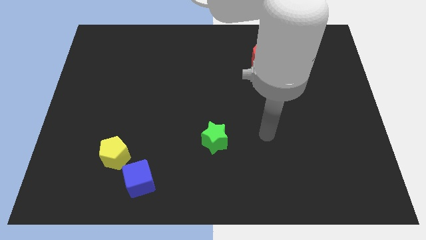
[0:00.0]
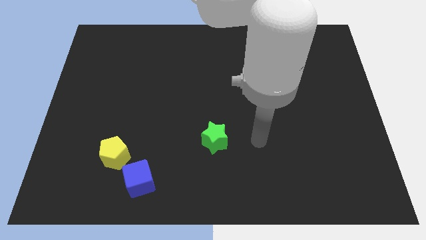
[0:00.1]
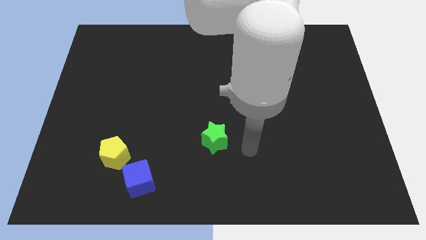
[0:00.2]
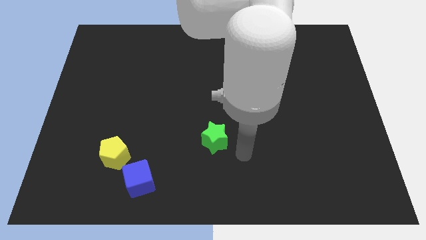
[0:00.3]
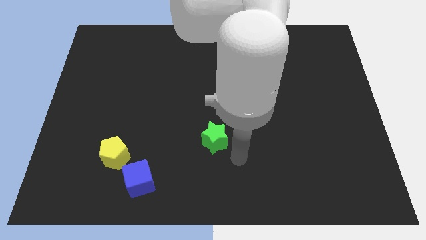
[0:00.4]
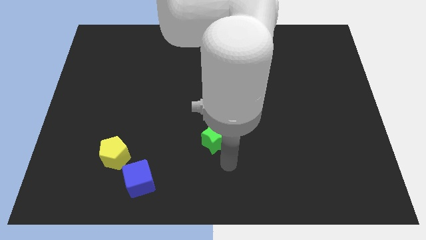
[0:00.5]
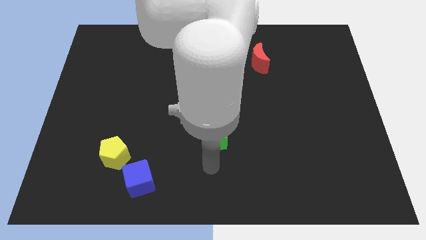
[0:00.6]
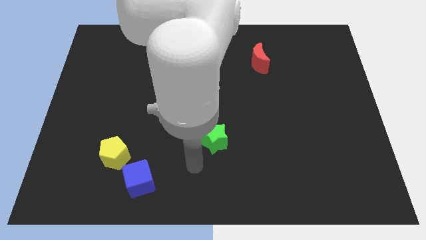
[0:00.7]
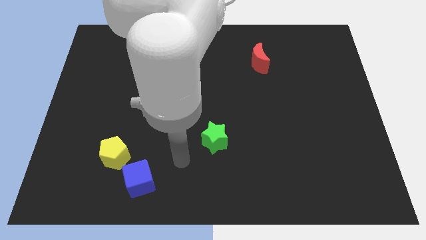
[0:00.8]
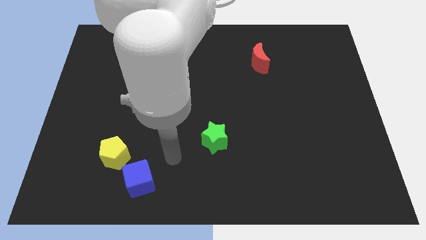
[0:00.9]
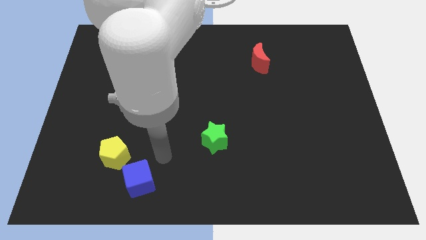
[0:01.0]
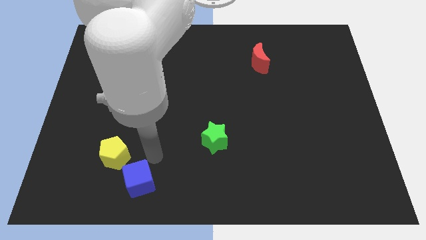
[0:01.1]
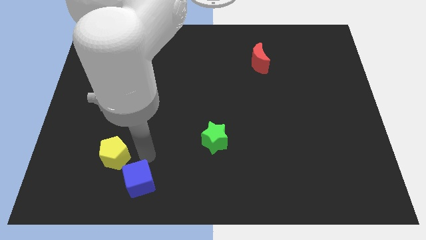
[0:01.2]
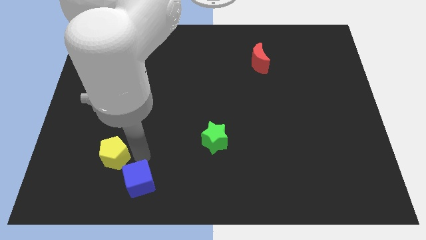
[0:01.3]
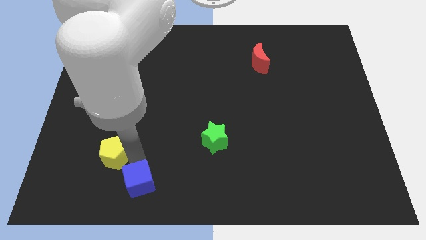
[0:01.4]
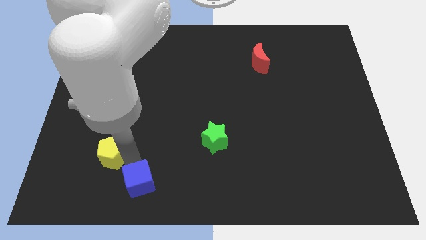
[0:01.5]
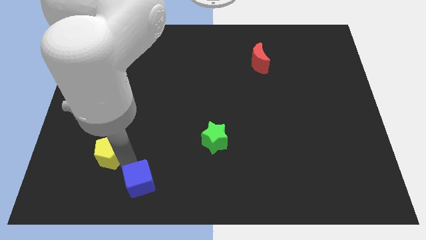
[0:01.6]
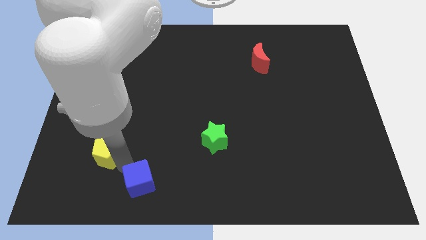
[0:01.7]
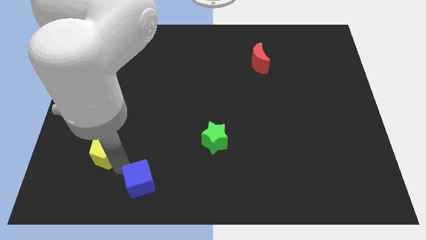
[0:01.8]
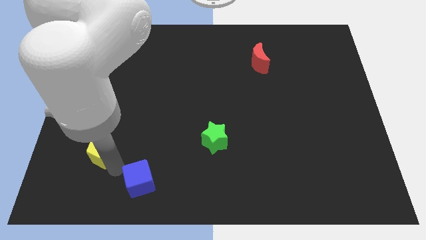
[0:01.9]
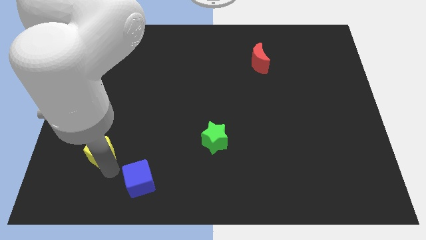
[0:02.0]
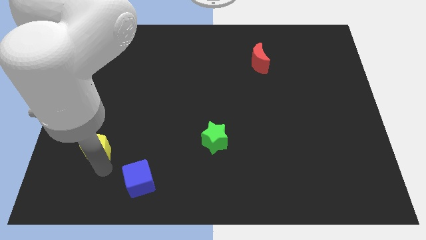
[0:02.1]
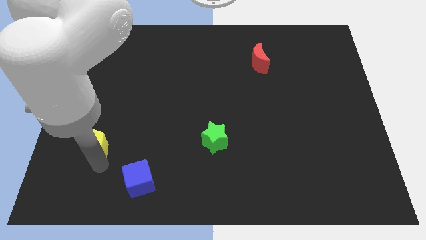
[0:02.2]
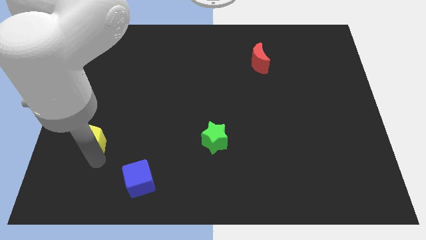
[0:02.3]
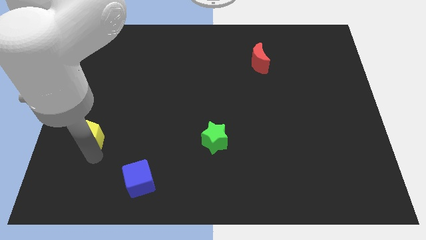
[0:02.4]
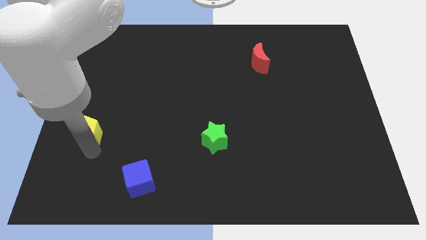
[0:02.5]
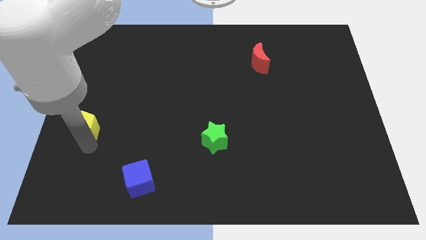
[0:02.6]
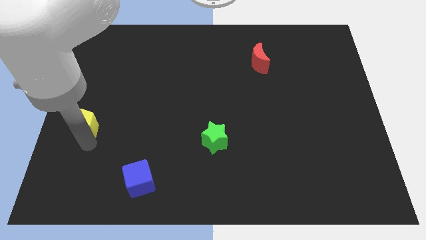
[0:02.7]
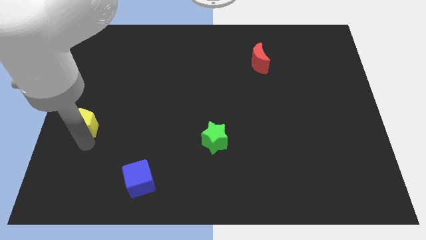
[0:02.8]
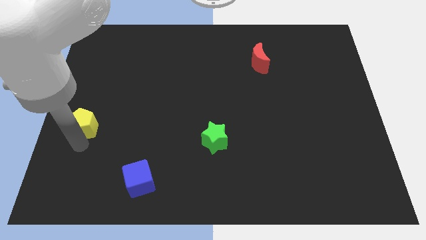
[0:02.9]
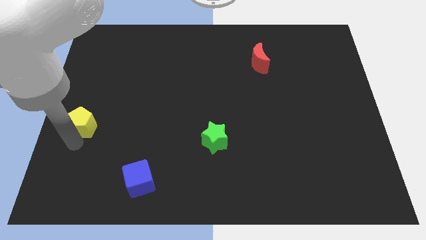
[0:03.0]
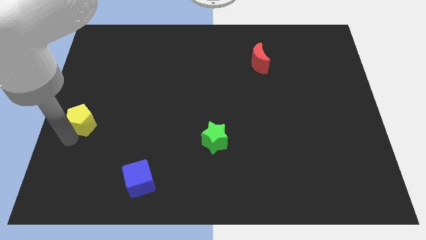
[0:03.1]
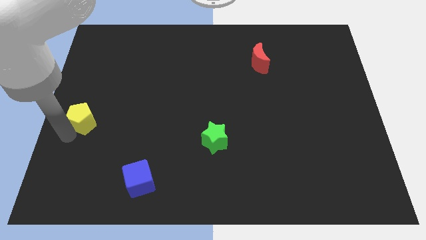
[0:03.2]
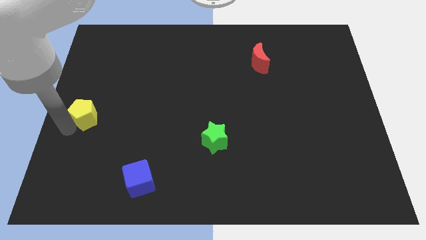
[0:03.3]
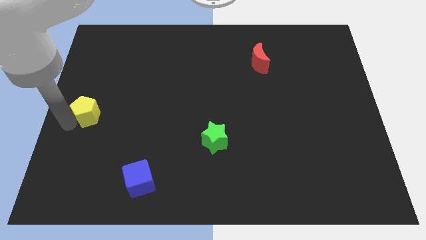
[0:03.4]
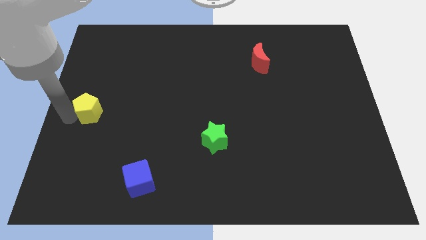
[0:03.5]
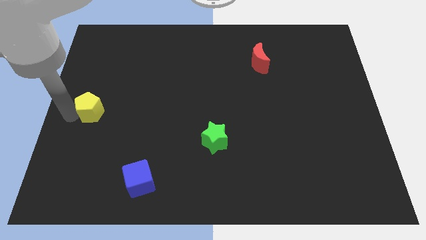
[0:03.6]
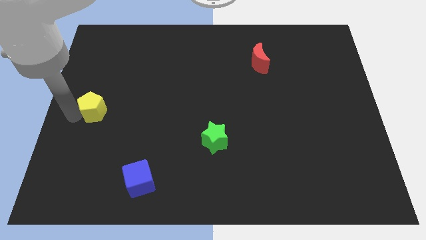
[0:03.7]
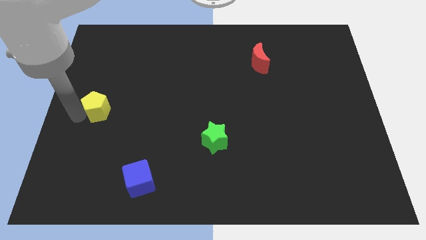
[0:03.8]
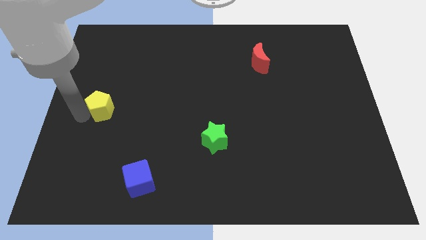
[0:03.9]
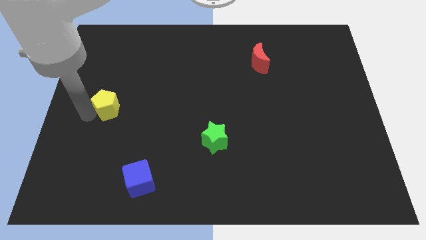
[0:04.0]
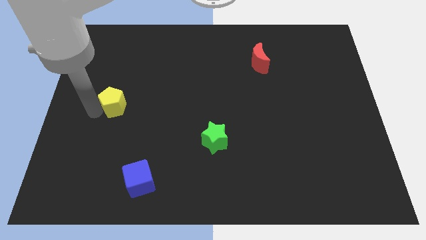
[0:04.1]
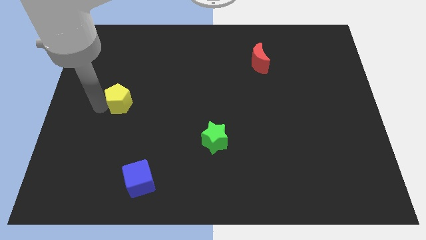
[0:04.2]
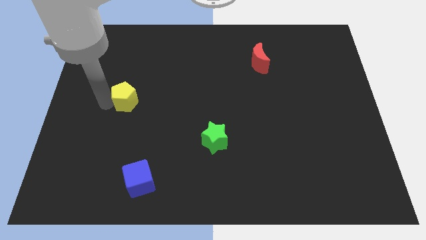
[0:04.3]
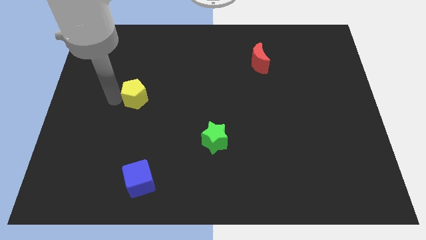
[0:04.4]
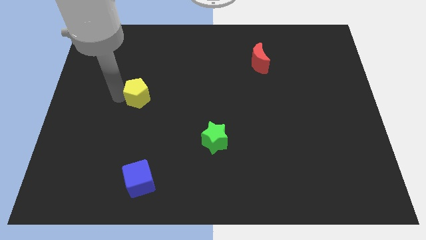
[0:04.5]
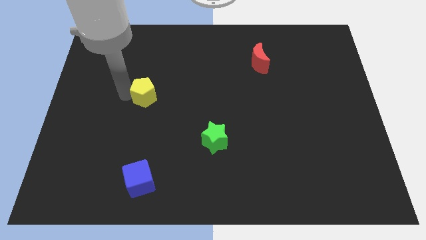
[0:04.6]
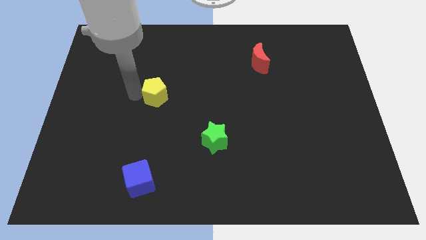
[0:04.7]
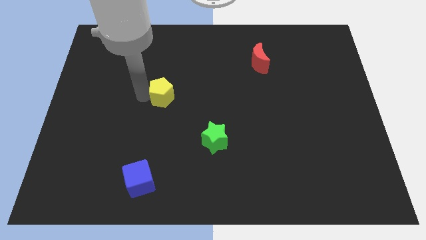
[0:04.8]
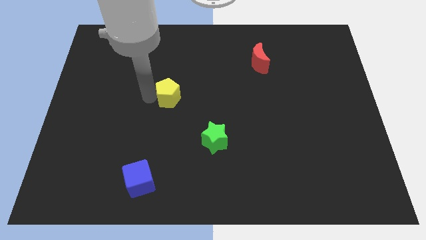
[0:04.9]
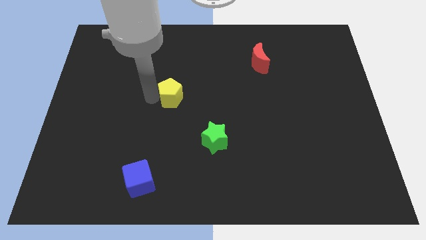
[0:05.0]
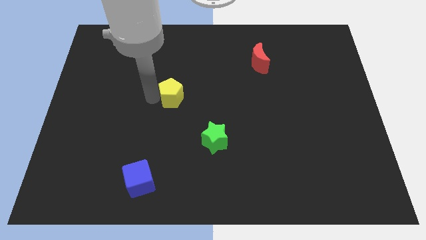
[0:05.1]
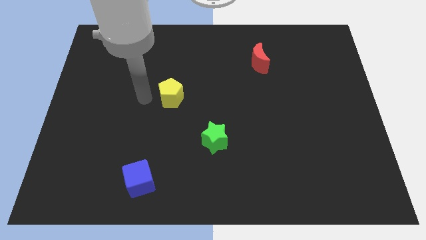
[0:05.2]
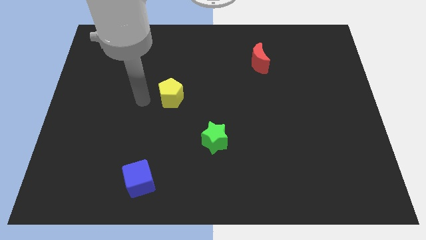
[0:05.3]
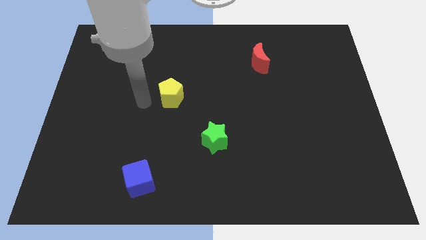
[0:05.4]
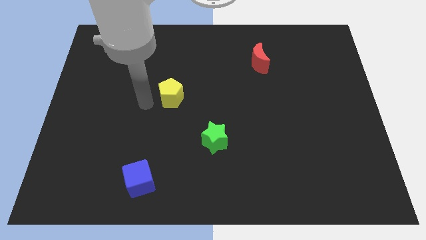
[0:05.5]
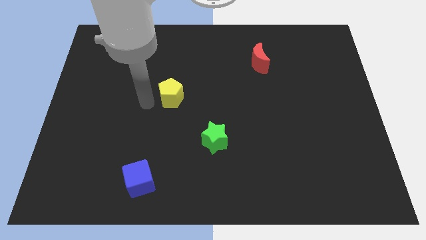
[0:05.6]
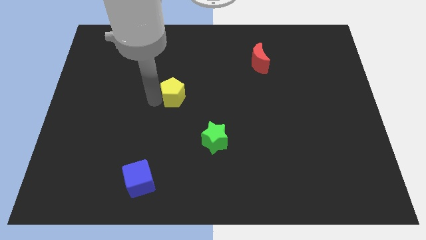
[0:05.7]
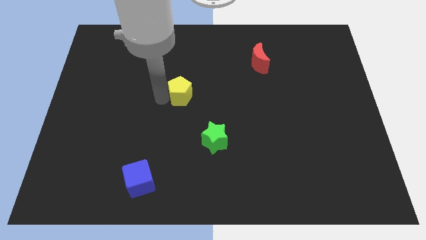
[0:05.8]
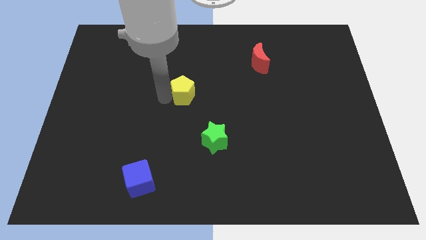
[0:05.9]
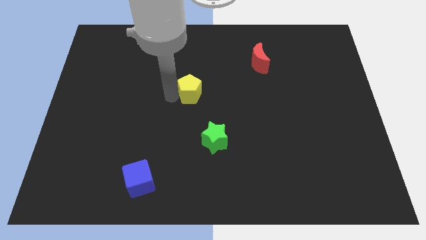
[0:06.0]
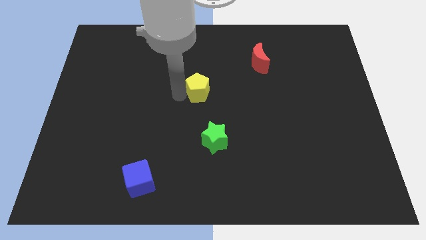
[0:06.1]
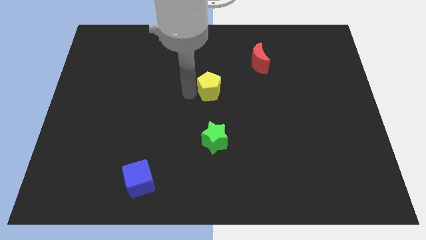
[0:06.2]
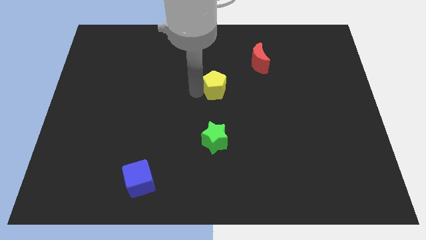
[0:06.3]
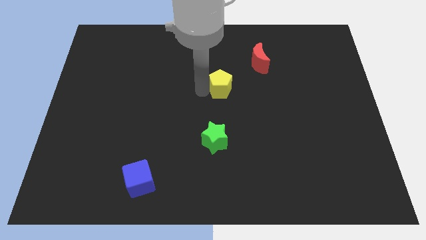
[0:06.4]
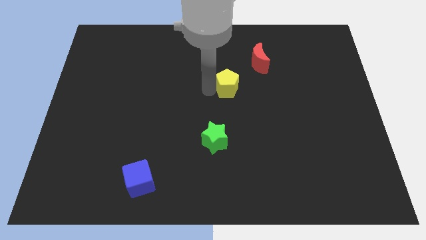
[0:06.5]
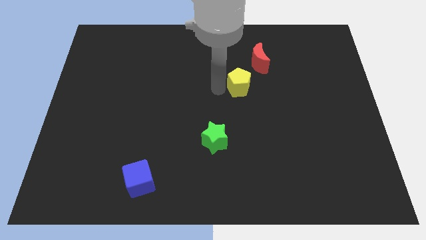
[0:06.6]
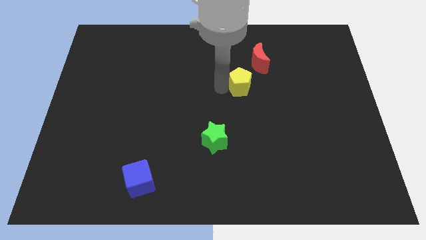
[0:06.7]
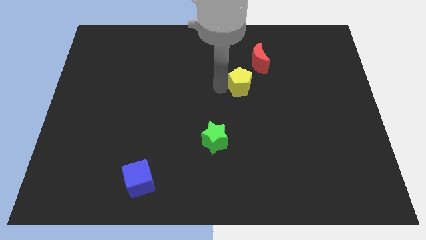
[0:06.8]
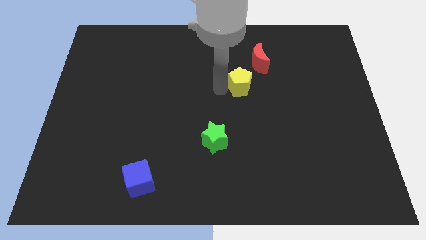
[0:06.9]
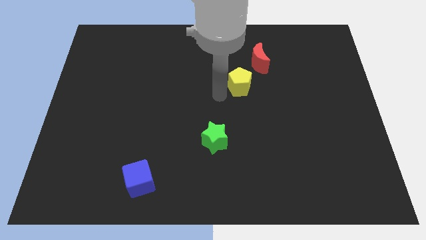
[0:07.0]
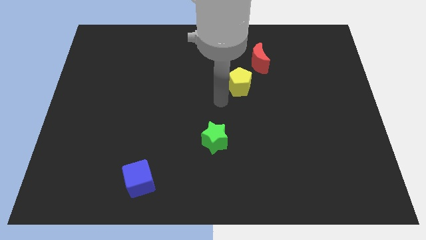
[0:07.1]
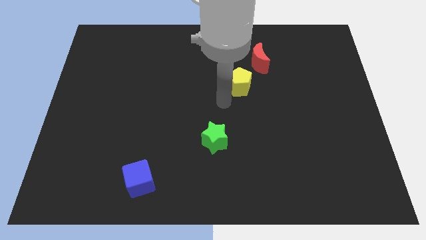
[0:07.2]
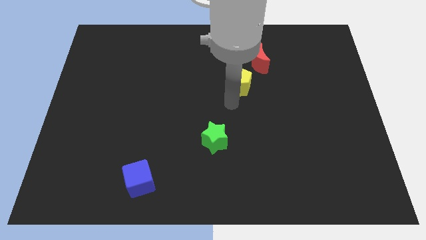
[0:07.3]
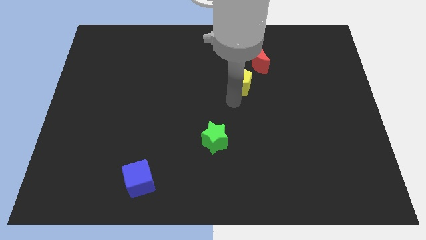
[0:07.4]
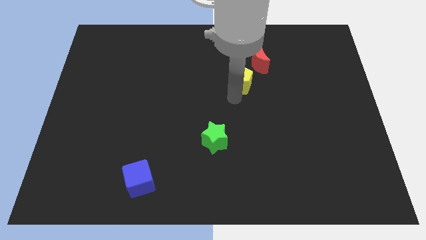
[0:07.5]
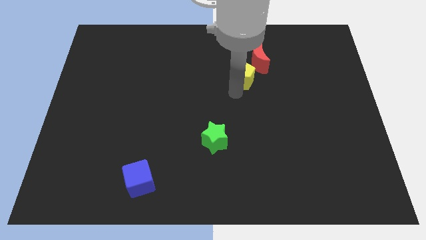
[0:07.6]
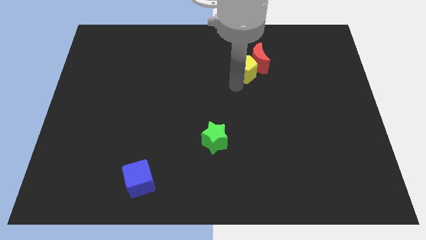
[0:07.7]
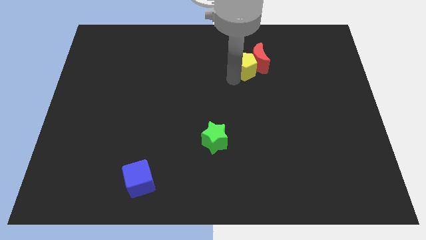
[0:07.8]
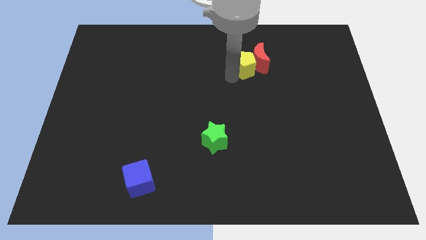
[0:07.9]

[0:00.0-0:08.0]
push the pentagon to the red block

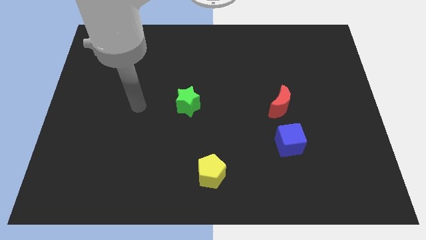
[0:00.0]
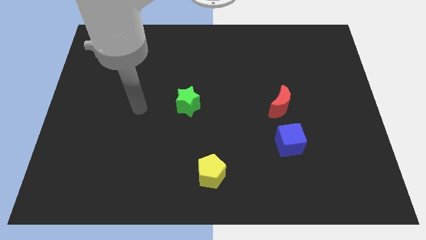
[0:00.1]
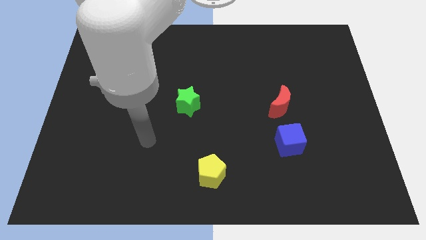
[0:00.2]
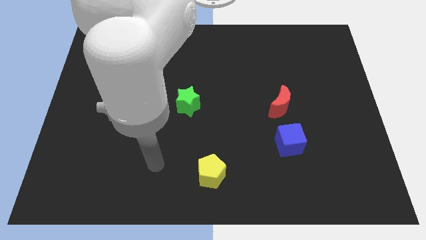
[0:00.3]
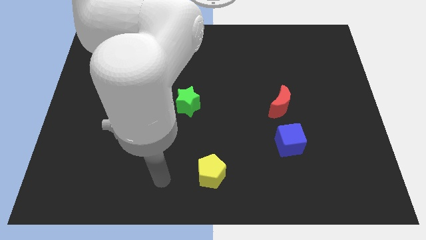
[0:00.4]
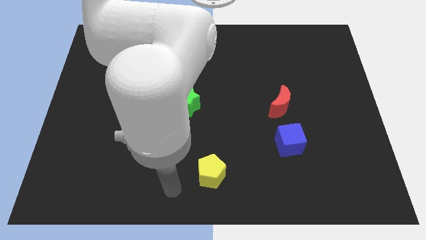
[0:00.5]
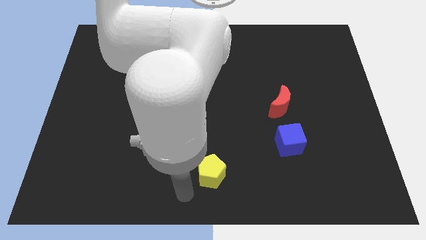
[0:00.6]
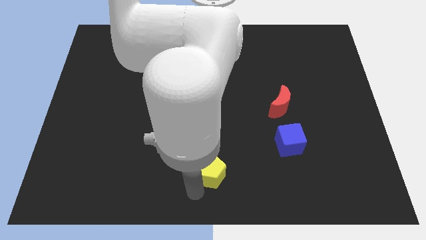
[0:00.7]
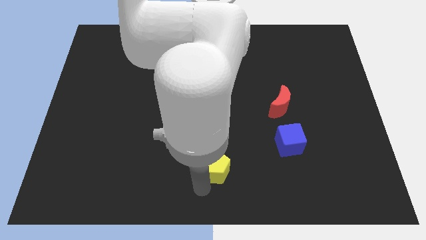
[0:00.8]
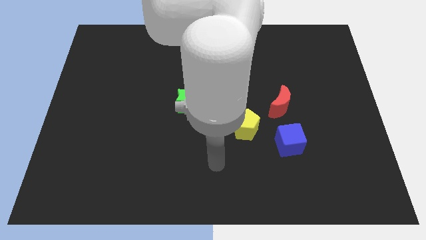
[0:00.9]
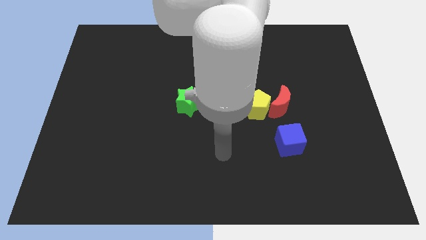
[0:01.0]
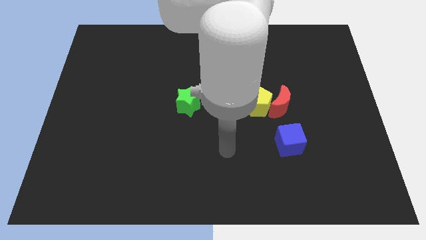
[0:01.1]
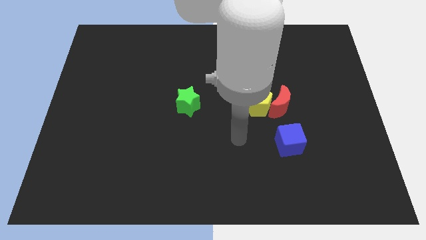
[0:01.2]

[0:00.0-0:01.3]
slide the pentagon close to the red moon
